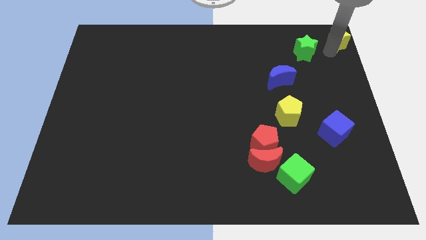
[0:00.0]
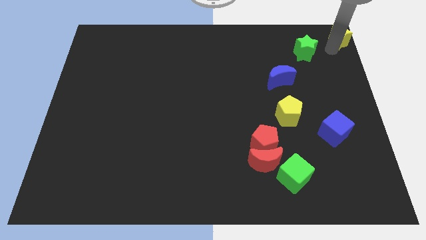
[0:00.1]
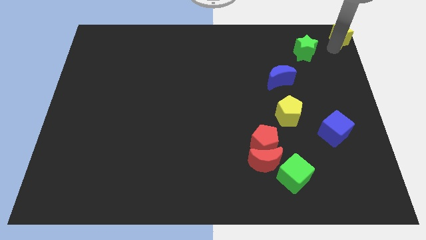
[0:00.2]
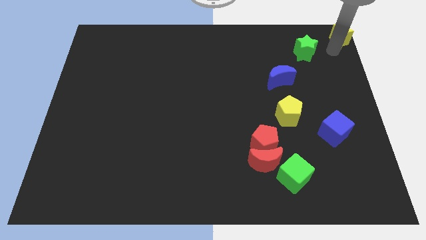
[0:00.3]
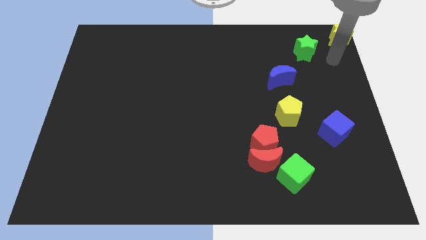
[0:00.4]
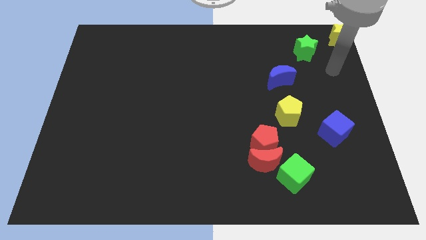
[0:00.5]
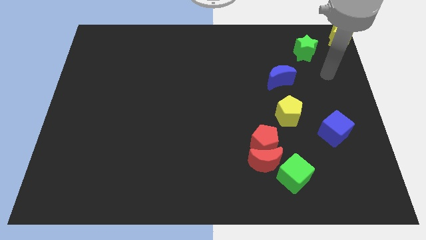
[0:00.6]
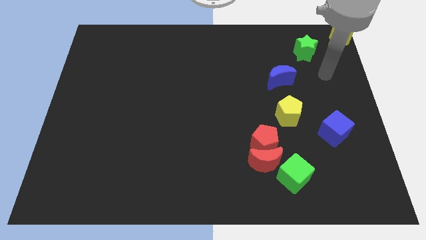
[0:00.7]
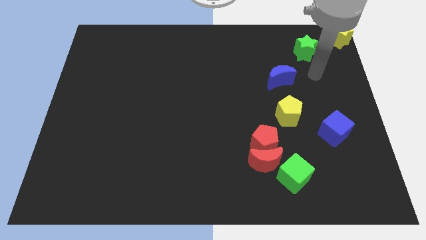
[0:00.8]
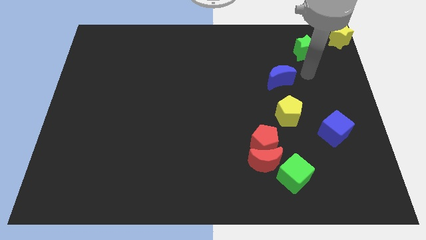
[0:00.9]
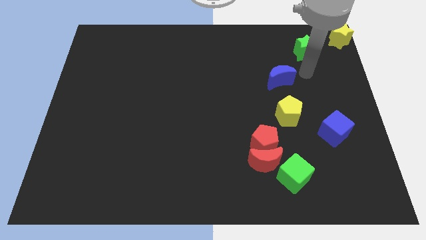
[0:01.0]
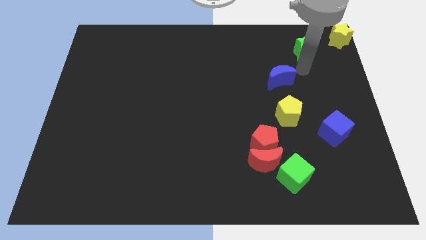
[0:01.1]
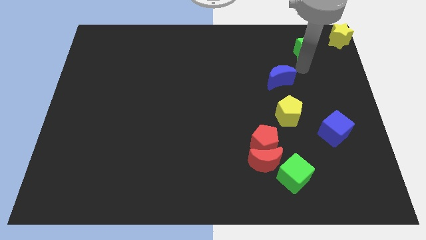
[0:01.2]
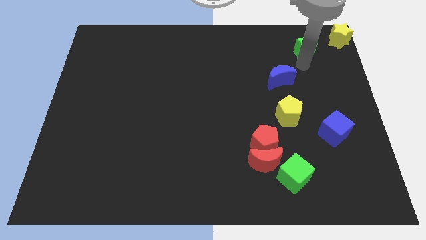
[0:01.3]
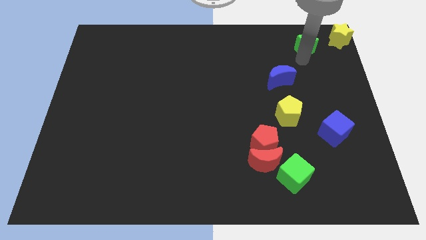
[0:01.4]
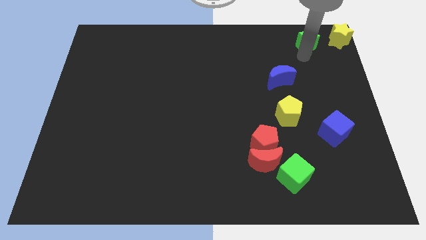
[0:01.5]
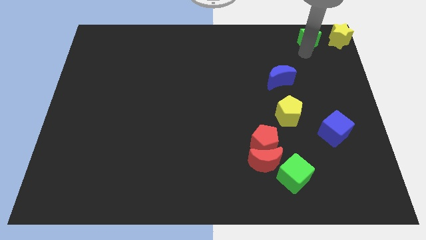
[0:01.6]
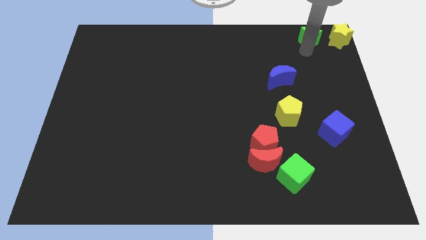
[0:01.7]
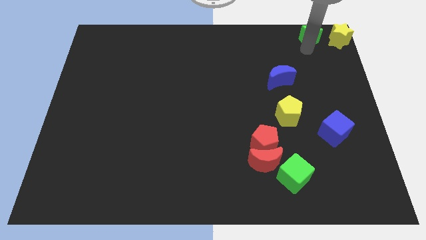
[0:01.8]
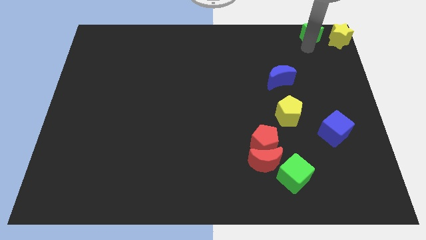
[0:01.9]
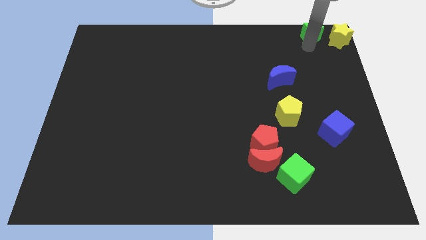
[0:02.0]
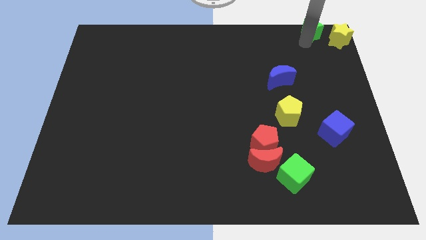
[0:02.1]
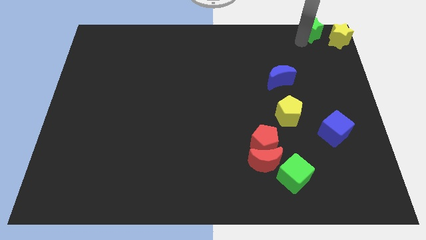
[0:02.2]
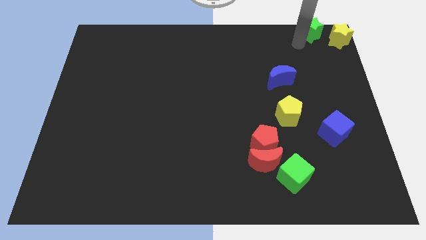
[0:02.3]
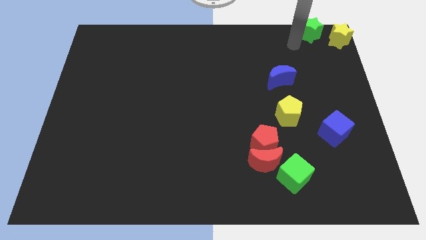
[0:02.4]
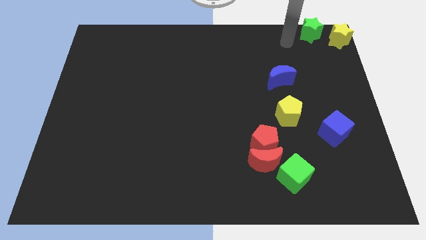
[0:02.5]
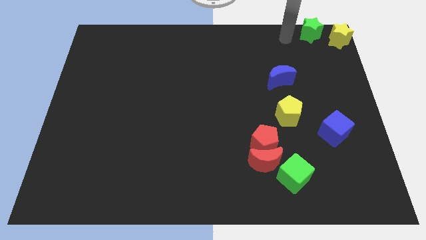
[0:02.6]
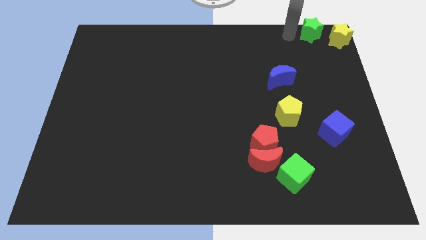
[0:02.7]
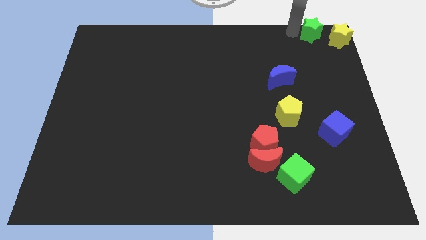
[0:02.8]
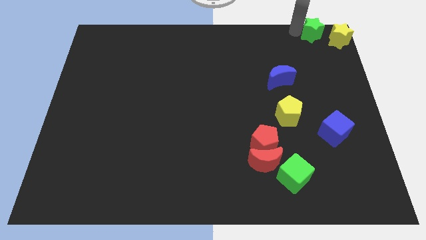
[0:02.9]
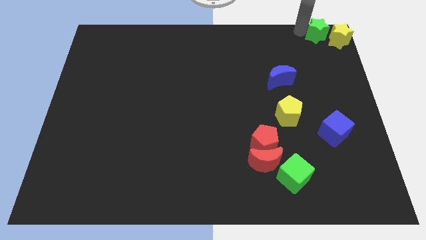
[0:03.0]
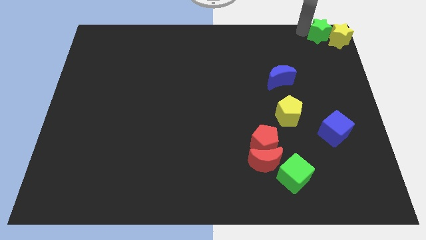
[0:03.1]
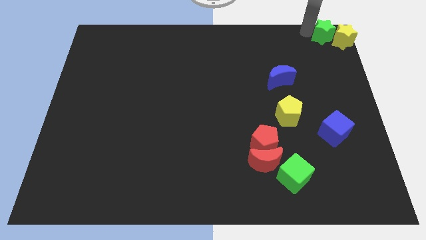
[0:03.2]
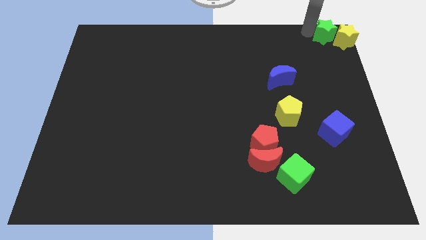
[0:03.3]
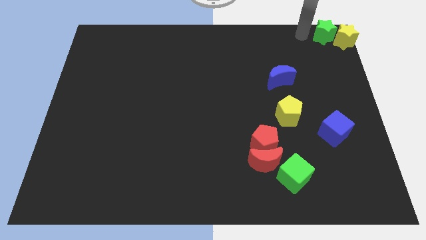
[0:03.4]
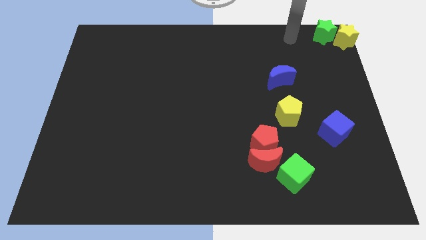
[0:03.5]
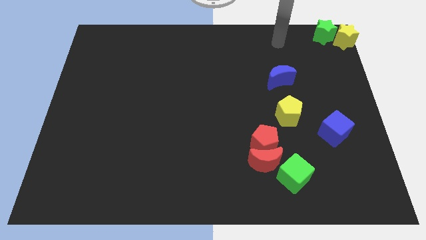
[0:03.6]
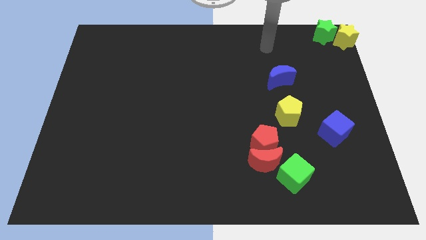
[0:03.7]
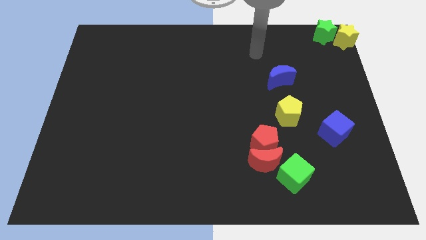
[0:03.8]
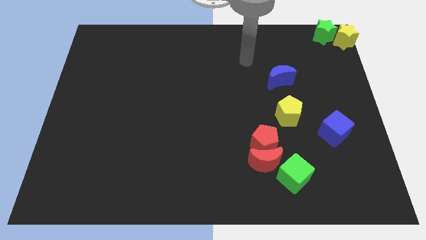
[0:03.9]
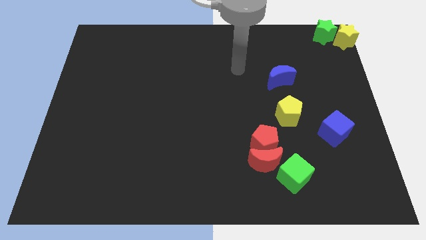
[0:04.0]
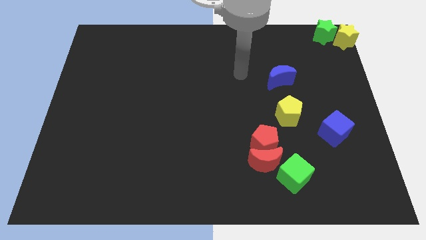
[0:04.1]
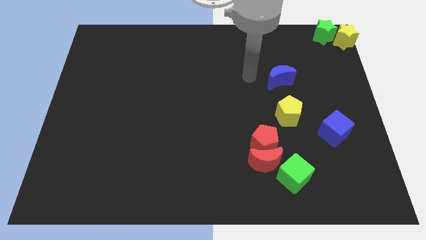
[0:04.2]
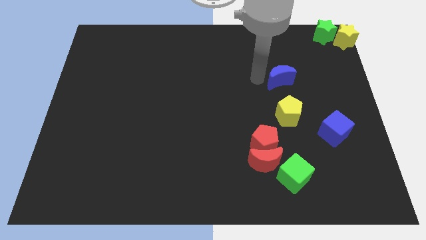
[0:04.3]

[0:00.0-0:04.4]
place the arm left to the blue moon

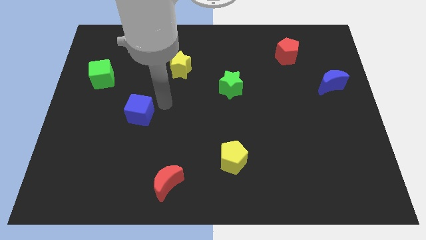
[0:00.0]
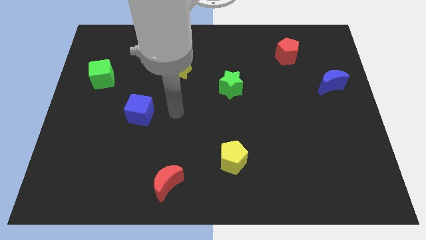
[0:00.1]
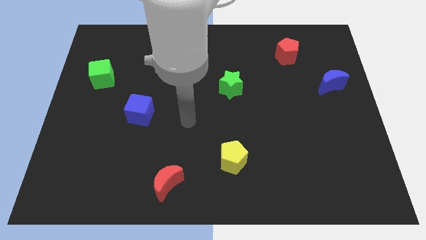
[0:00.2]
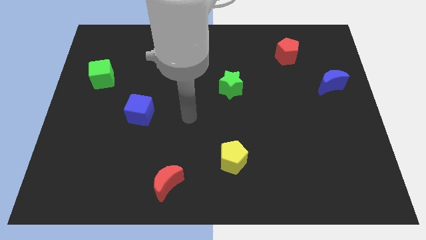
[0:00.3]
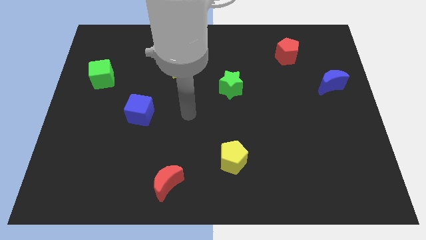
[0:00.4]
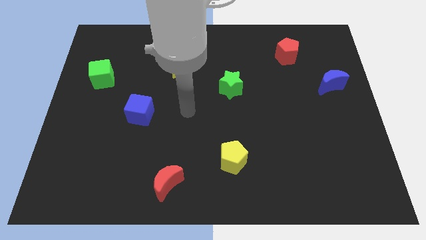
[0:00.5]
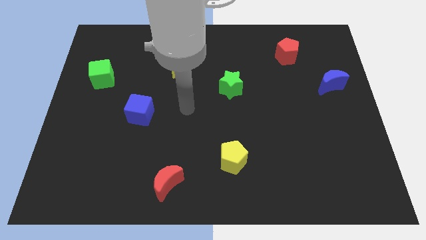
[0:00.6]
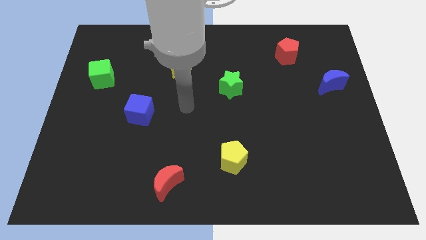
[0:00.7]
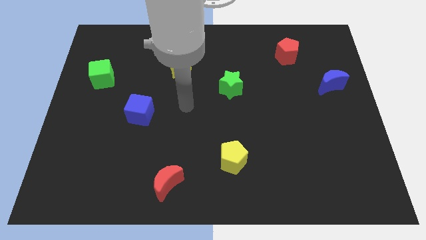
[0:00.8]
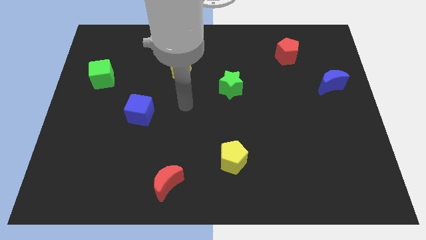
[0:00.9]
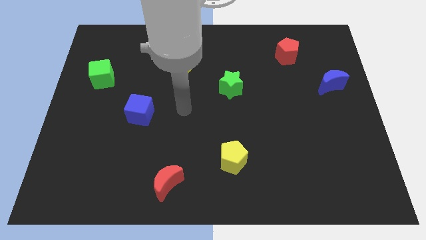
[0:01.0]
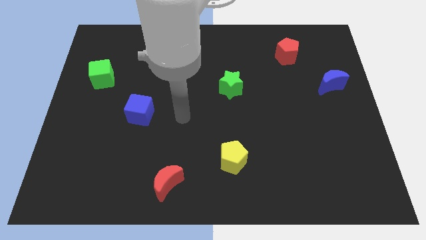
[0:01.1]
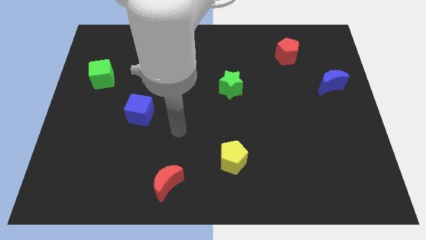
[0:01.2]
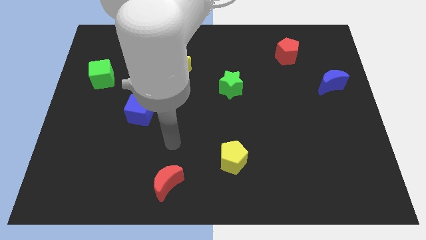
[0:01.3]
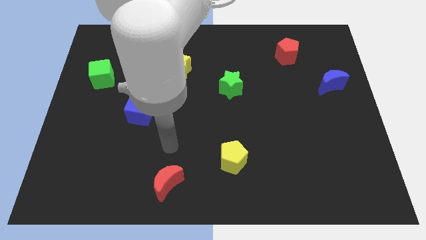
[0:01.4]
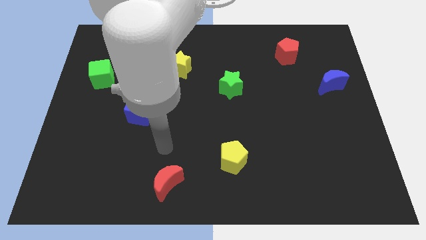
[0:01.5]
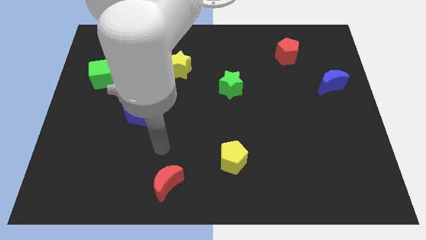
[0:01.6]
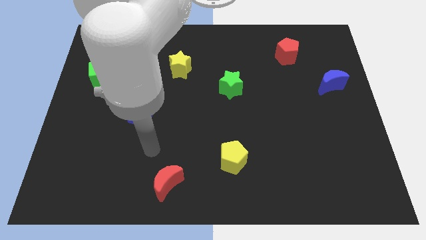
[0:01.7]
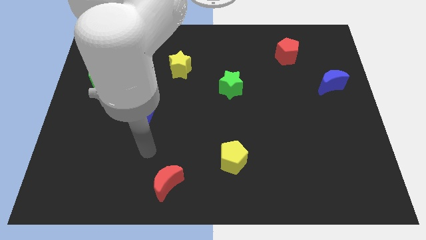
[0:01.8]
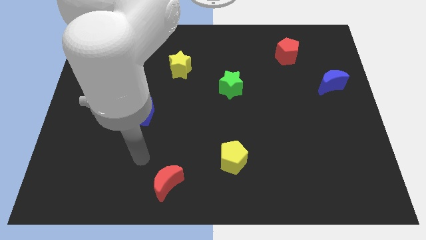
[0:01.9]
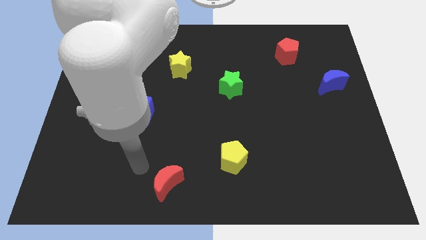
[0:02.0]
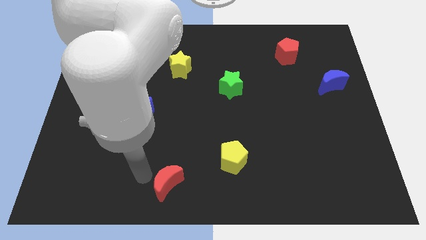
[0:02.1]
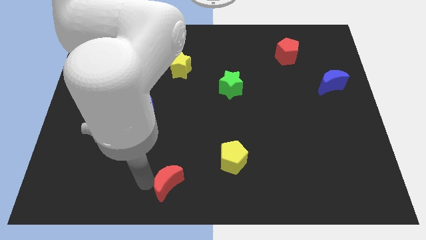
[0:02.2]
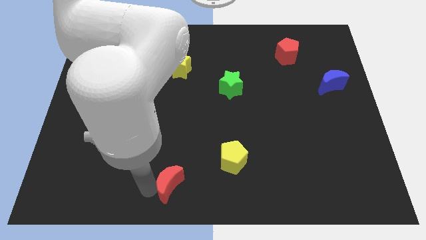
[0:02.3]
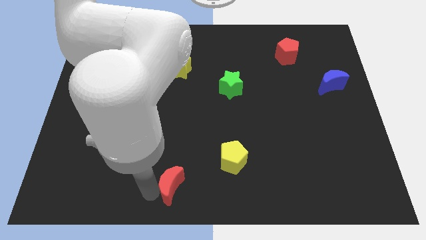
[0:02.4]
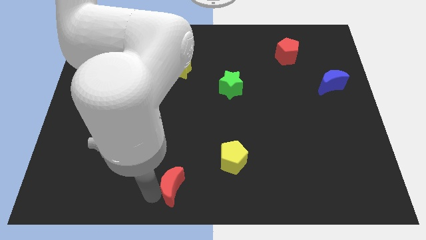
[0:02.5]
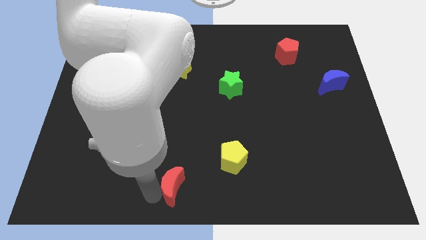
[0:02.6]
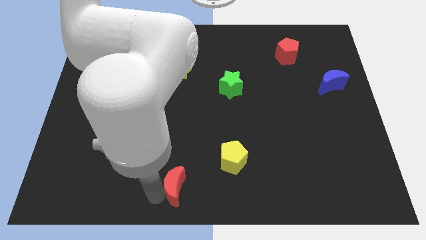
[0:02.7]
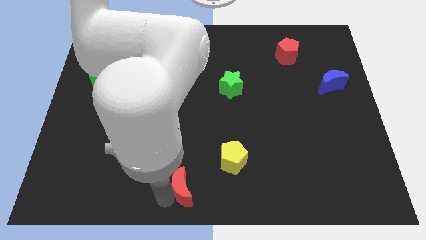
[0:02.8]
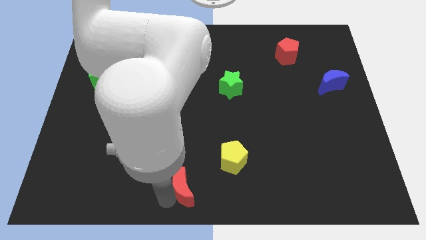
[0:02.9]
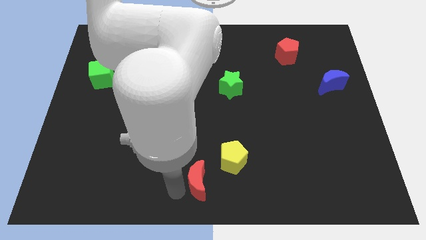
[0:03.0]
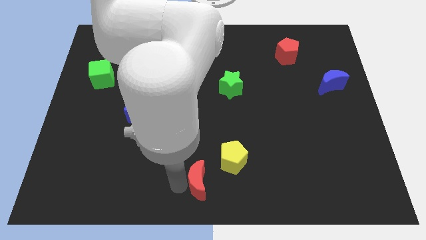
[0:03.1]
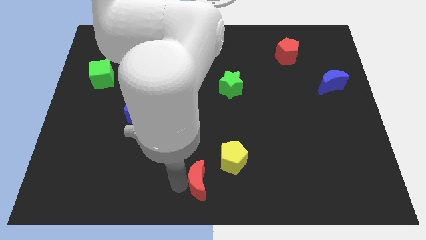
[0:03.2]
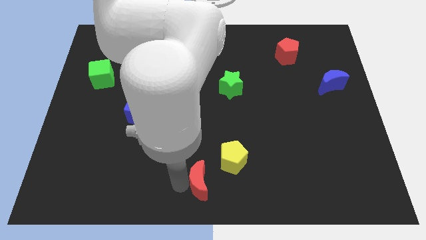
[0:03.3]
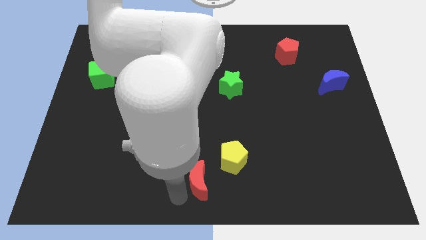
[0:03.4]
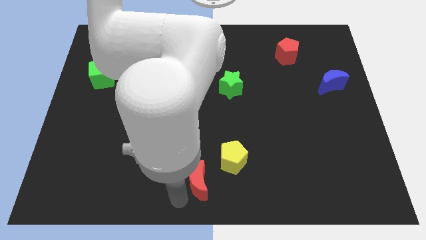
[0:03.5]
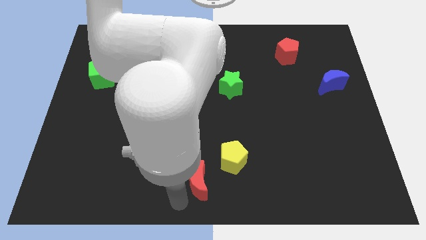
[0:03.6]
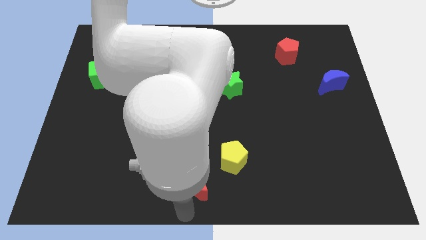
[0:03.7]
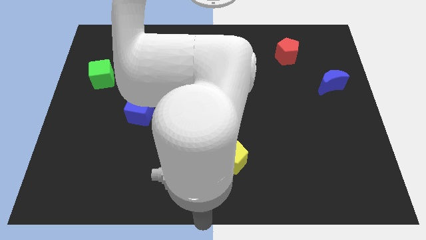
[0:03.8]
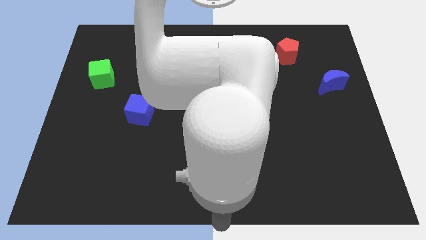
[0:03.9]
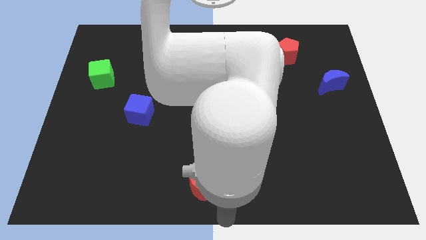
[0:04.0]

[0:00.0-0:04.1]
push the red moon near the yellow pentagon

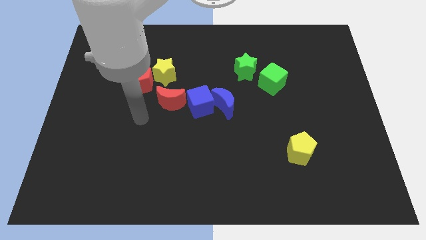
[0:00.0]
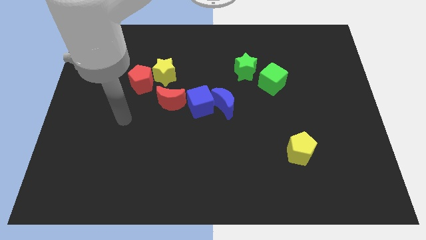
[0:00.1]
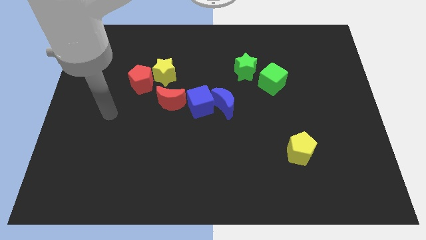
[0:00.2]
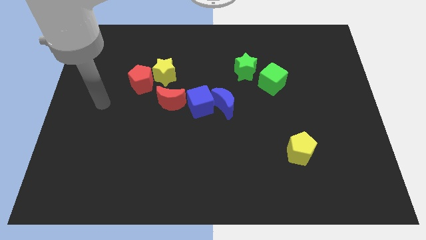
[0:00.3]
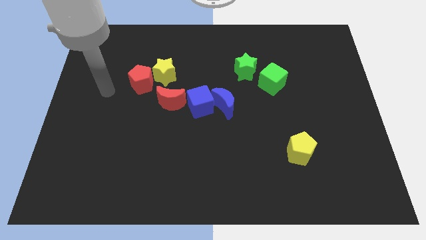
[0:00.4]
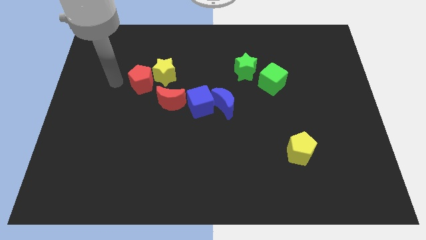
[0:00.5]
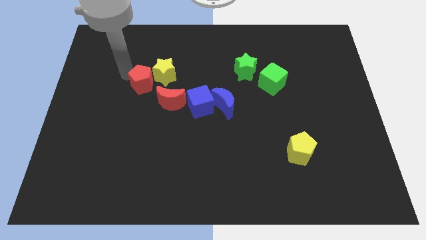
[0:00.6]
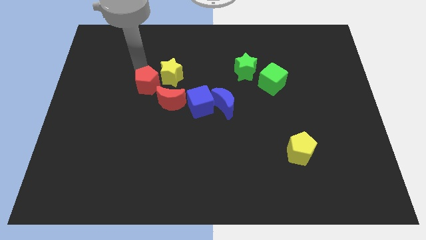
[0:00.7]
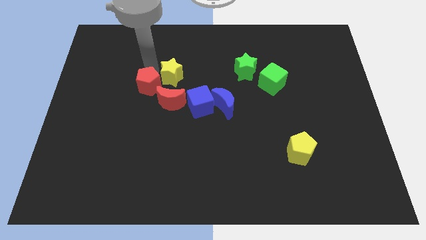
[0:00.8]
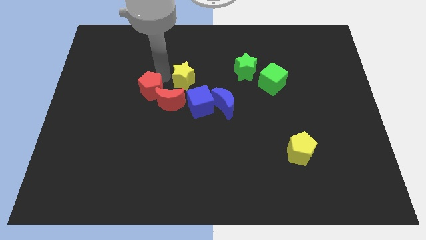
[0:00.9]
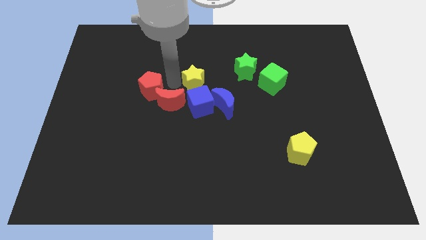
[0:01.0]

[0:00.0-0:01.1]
push the yellow star to the top of the blue cube
